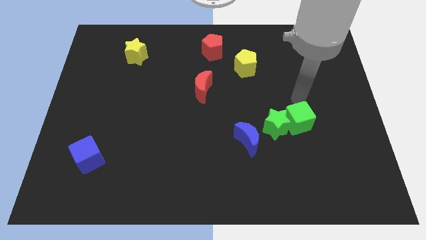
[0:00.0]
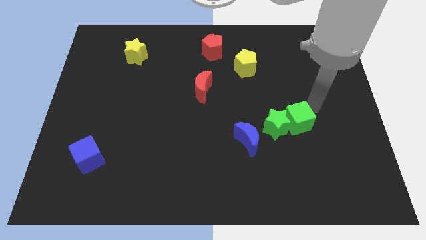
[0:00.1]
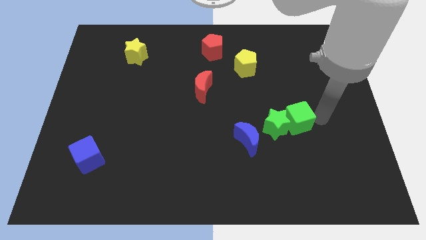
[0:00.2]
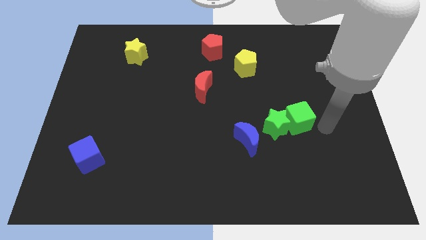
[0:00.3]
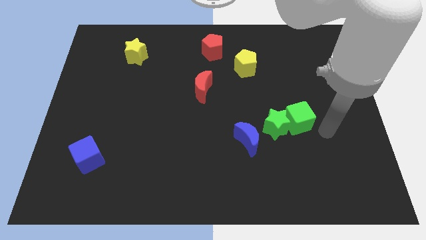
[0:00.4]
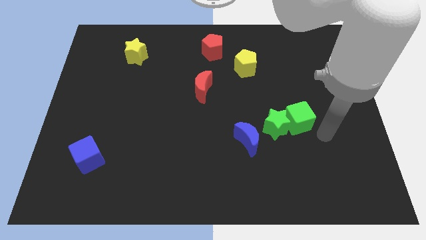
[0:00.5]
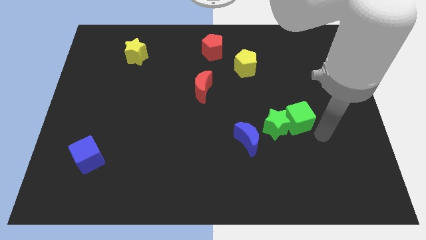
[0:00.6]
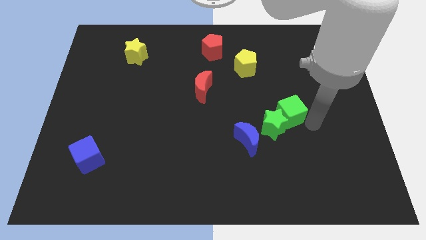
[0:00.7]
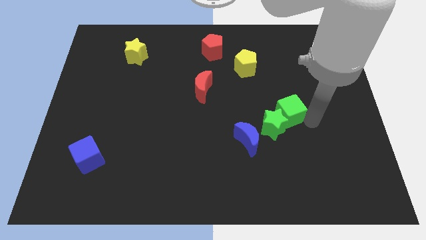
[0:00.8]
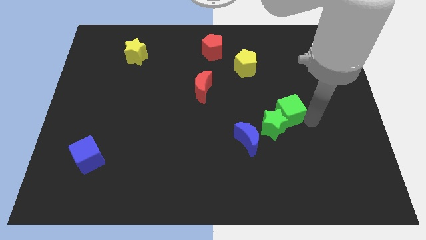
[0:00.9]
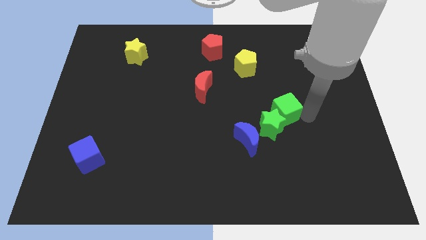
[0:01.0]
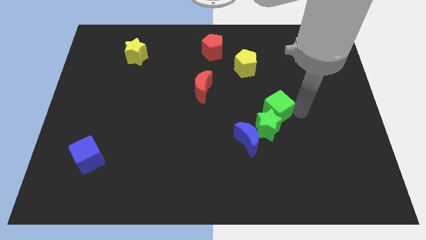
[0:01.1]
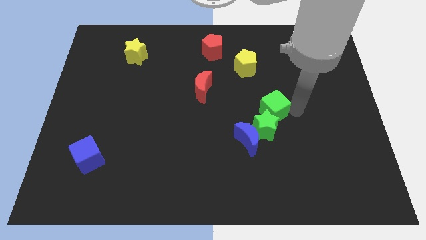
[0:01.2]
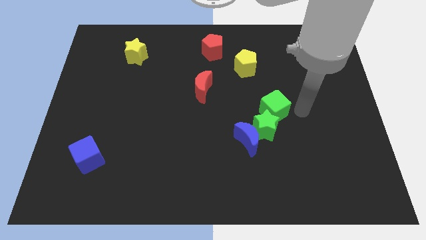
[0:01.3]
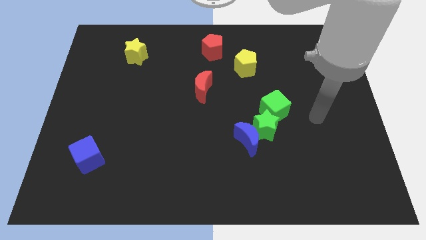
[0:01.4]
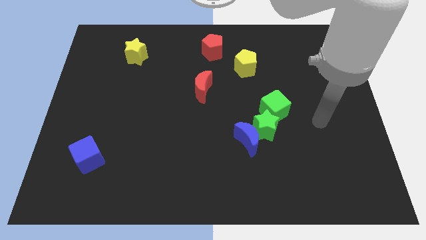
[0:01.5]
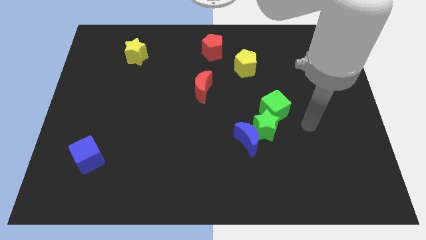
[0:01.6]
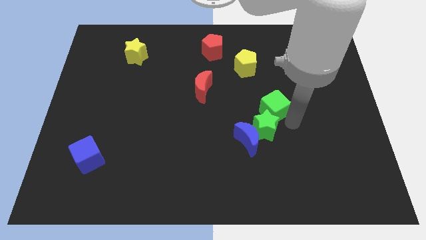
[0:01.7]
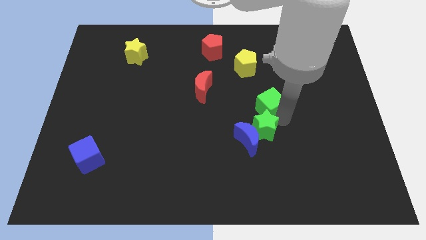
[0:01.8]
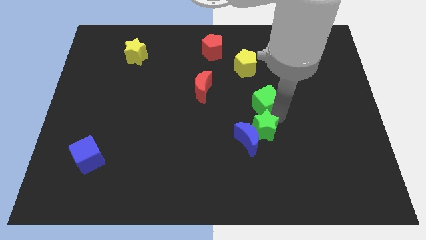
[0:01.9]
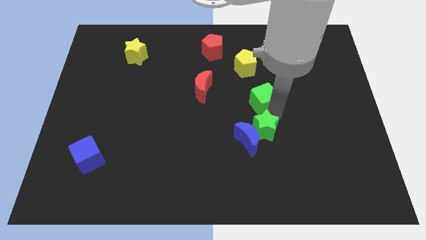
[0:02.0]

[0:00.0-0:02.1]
move your arm in between green blocks

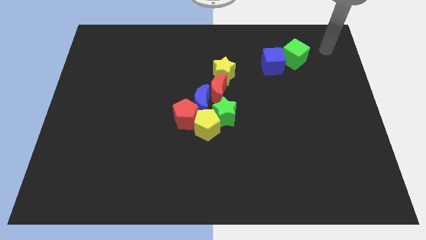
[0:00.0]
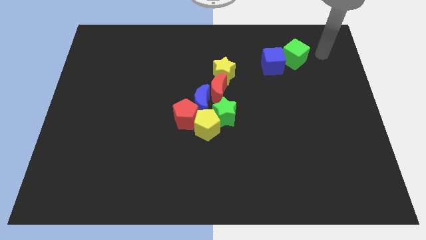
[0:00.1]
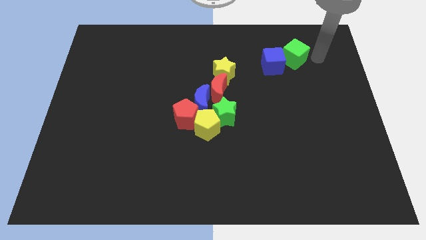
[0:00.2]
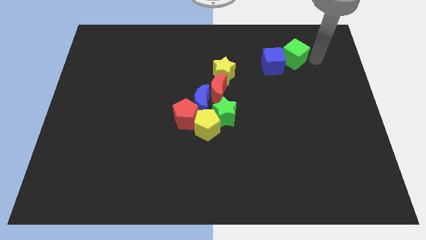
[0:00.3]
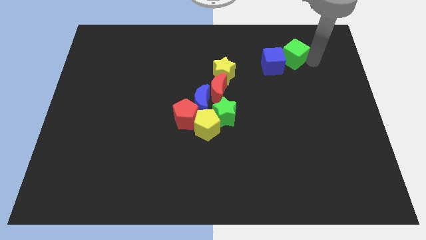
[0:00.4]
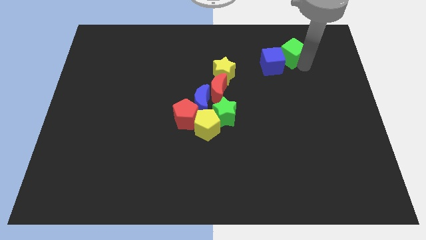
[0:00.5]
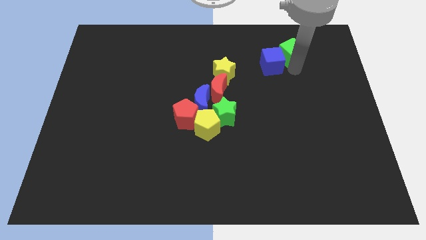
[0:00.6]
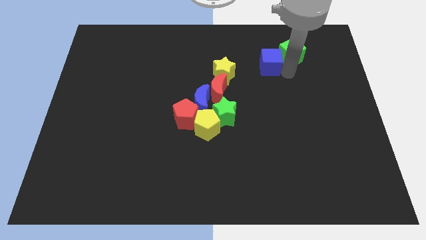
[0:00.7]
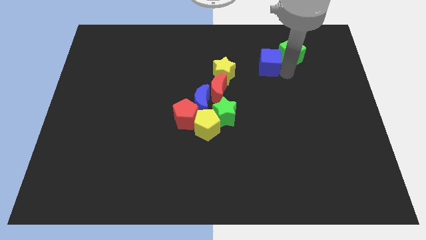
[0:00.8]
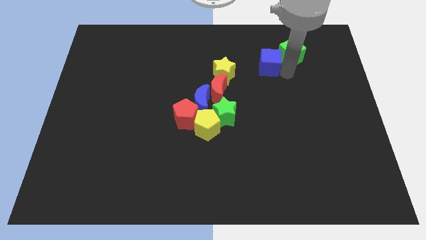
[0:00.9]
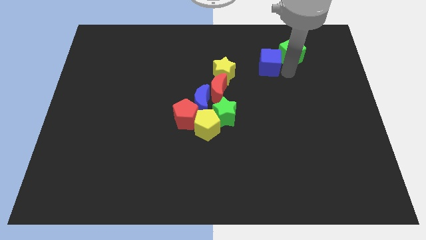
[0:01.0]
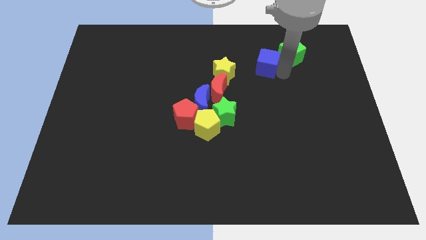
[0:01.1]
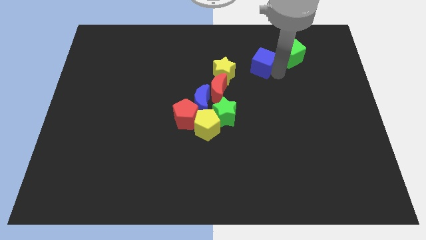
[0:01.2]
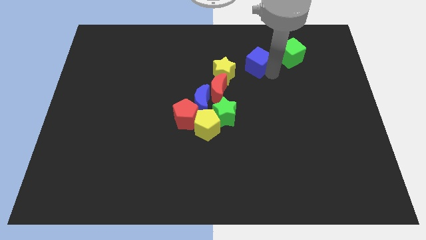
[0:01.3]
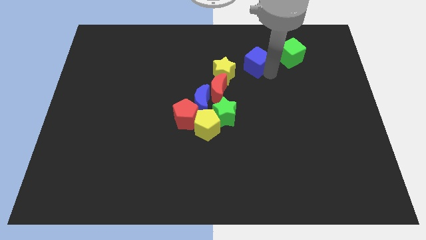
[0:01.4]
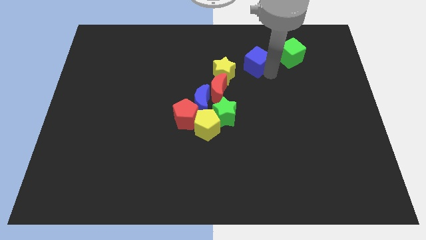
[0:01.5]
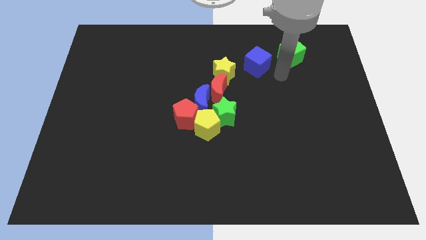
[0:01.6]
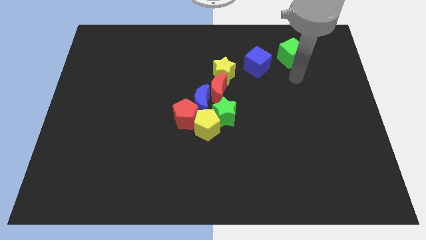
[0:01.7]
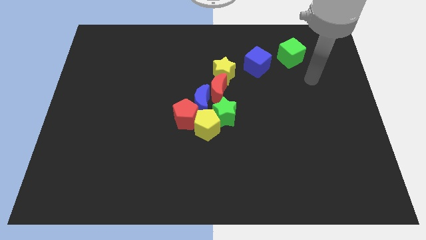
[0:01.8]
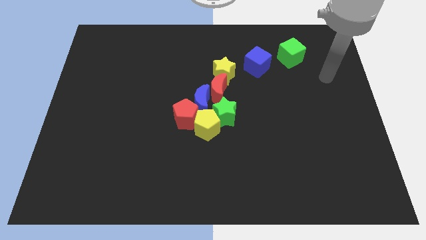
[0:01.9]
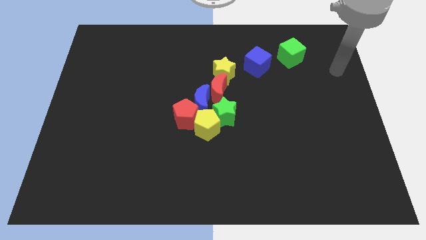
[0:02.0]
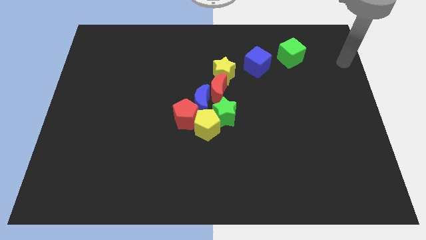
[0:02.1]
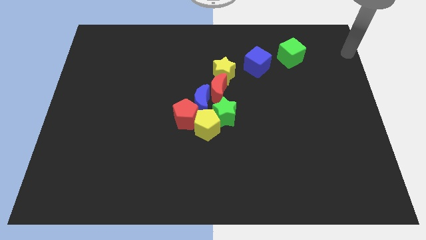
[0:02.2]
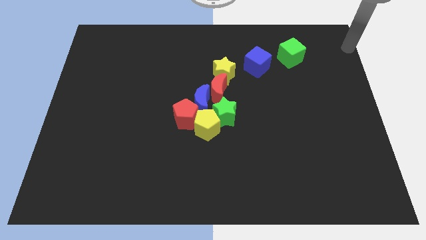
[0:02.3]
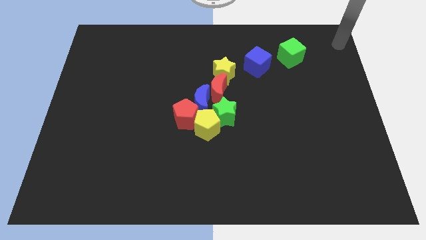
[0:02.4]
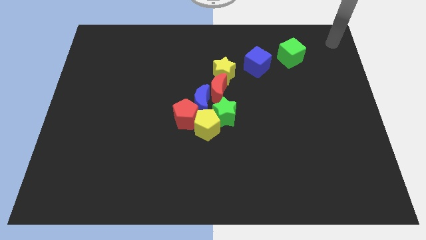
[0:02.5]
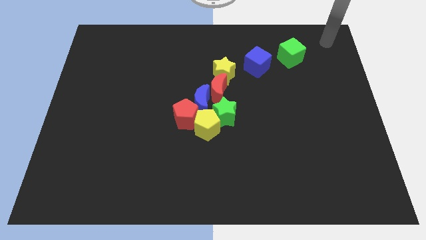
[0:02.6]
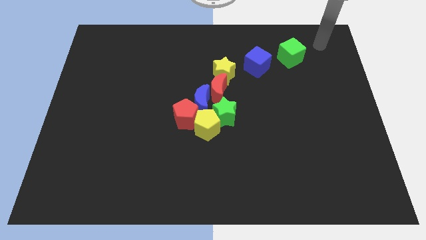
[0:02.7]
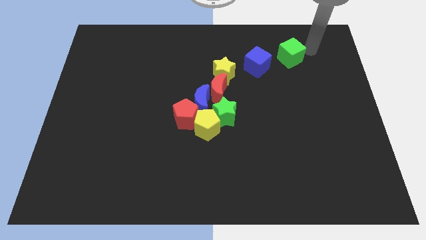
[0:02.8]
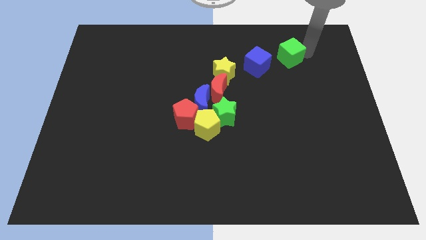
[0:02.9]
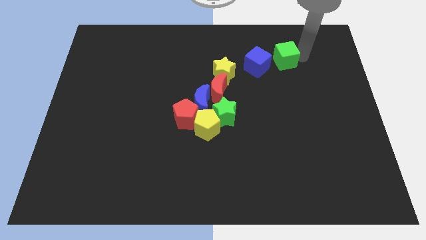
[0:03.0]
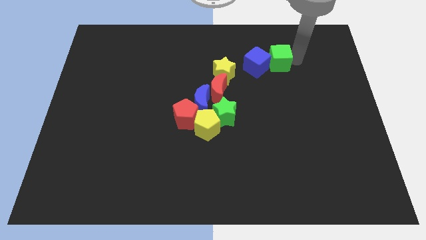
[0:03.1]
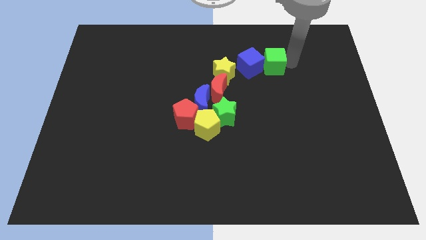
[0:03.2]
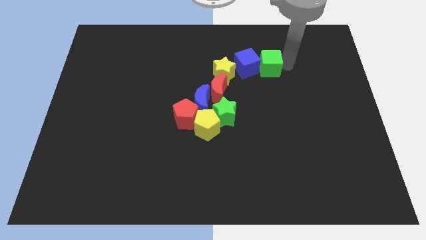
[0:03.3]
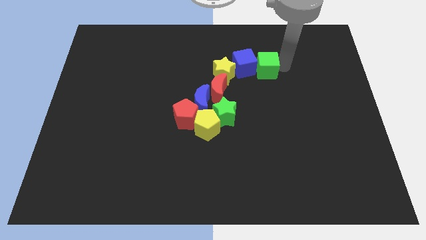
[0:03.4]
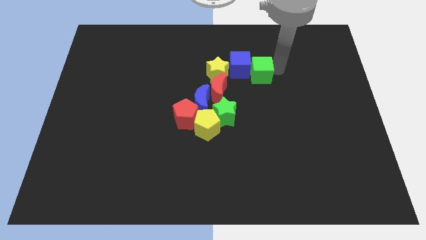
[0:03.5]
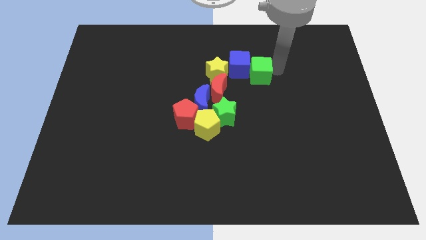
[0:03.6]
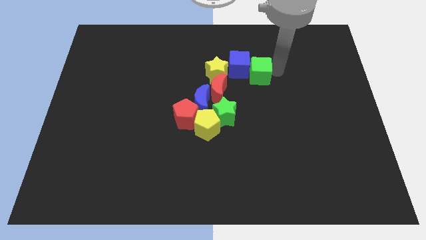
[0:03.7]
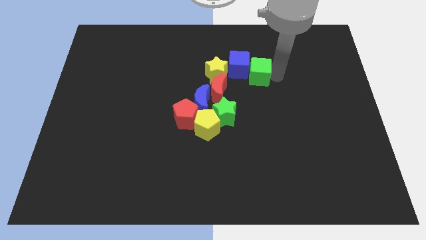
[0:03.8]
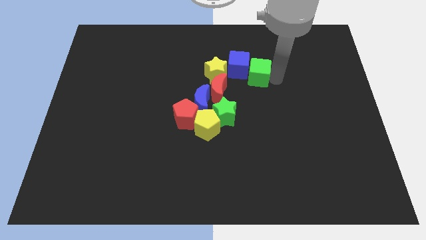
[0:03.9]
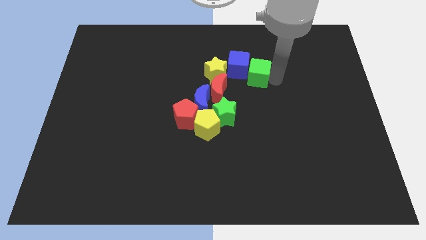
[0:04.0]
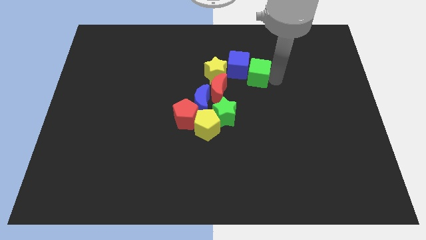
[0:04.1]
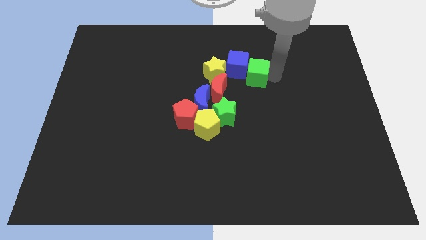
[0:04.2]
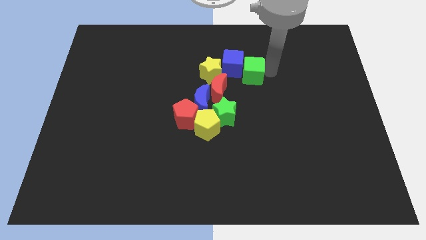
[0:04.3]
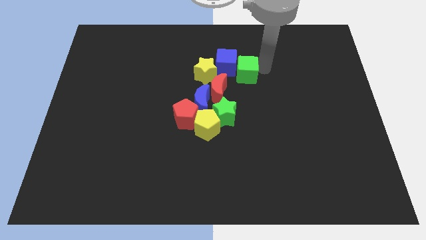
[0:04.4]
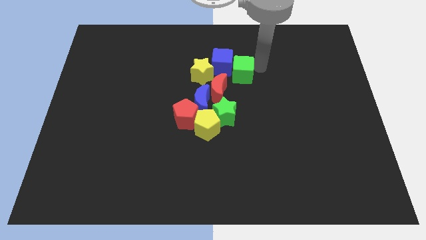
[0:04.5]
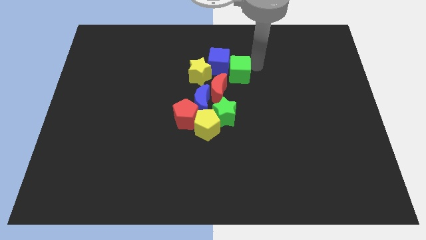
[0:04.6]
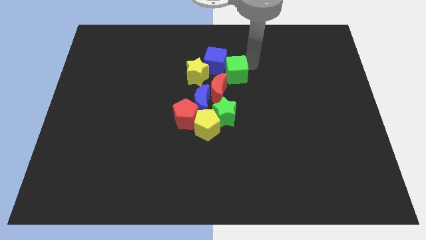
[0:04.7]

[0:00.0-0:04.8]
push the blue cube and the green cube towards the group of blocks

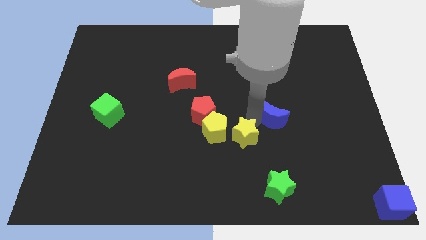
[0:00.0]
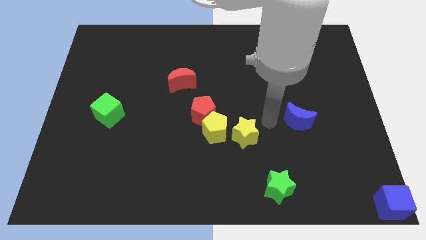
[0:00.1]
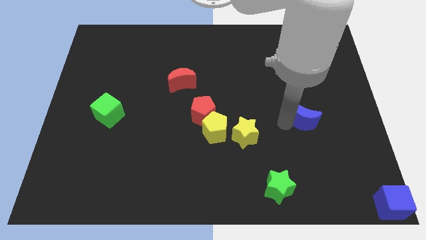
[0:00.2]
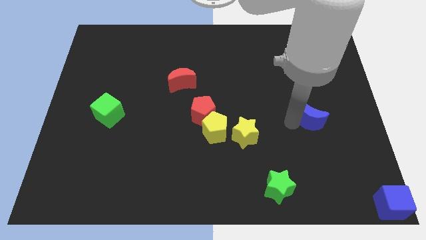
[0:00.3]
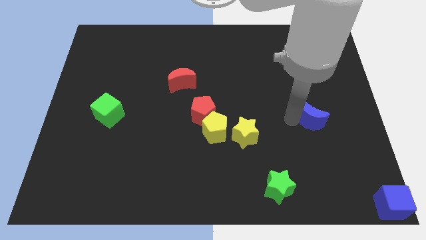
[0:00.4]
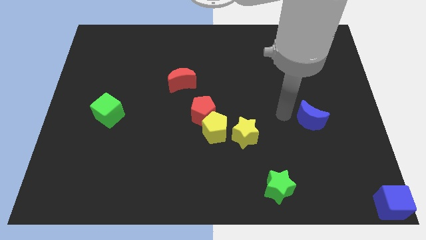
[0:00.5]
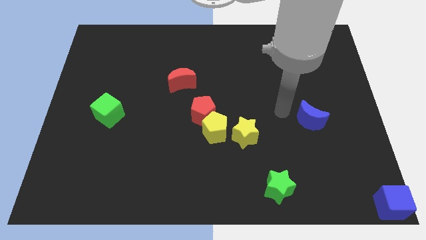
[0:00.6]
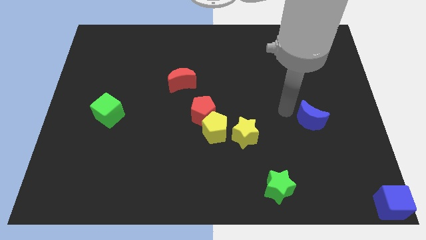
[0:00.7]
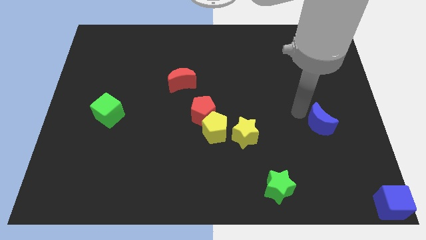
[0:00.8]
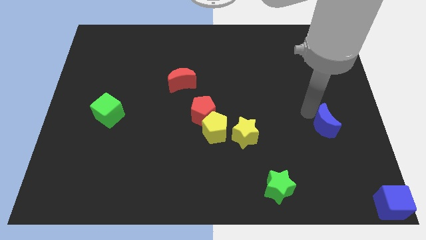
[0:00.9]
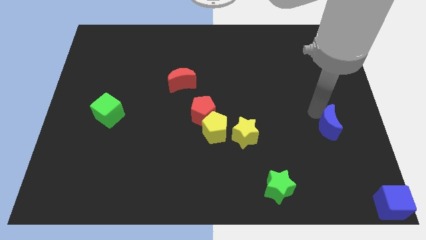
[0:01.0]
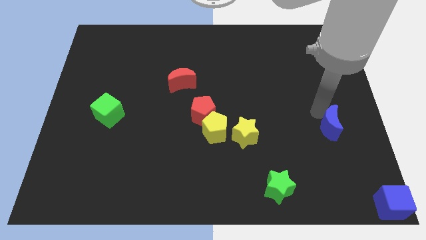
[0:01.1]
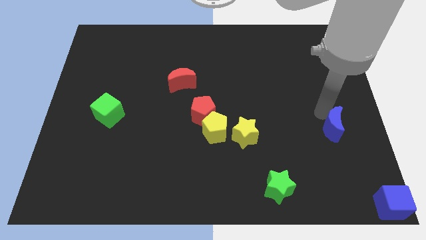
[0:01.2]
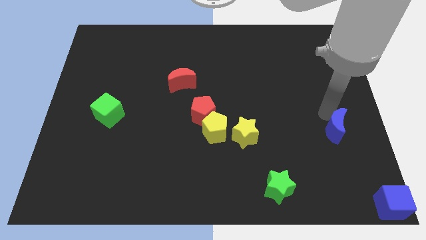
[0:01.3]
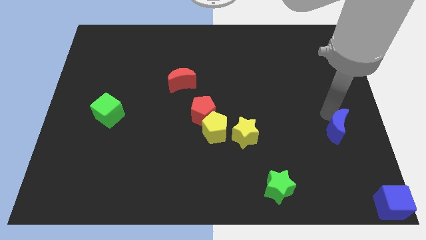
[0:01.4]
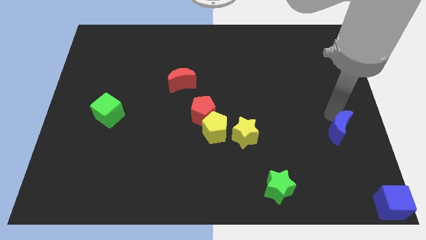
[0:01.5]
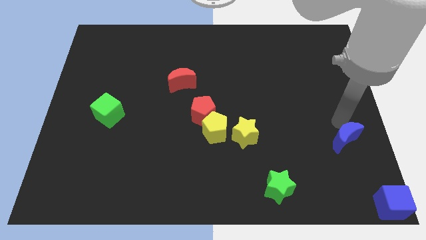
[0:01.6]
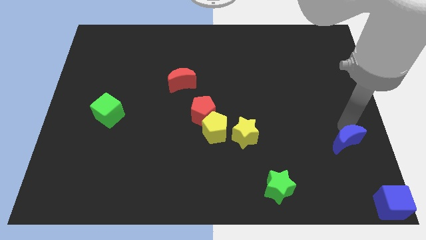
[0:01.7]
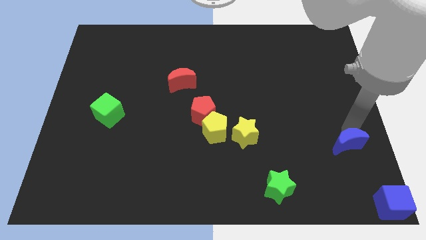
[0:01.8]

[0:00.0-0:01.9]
push the blue moon to the right center of the board
